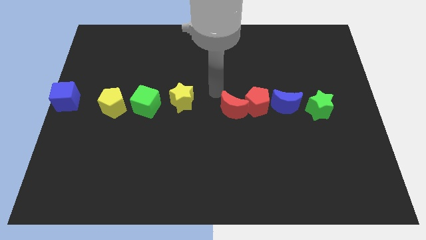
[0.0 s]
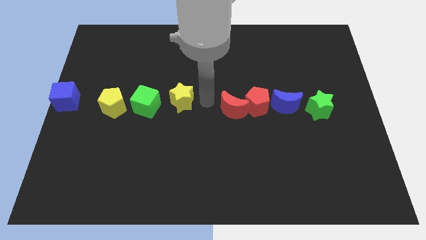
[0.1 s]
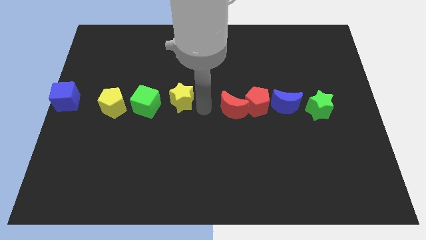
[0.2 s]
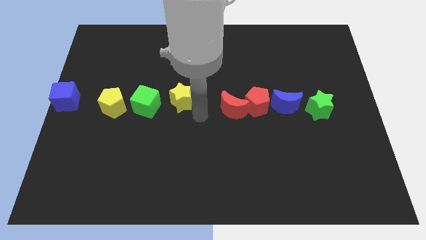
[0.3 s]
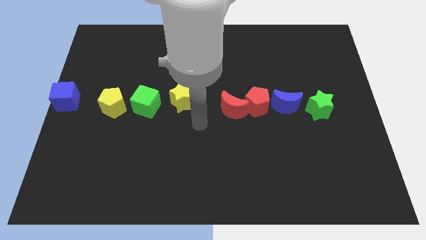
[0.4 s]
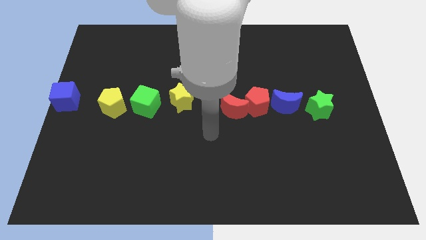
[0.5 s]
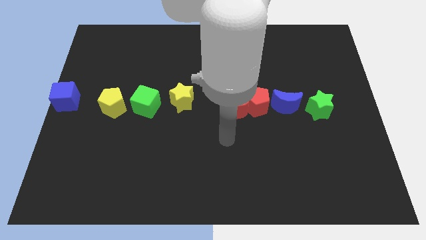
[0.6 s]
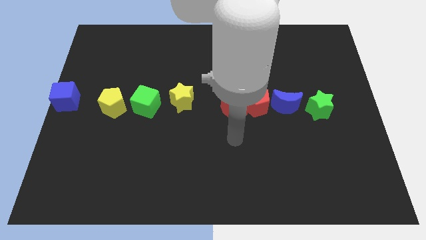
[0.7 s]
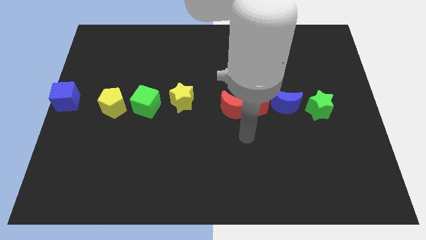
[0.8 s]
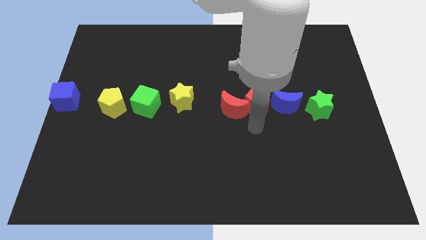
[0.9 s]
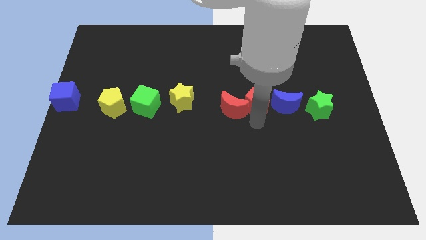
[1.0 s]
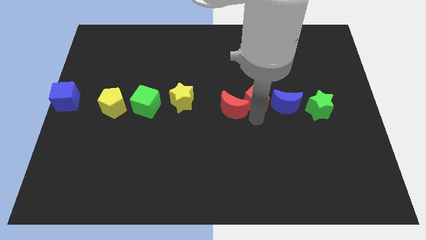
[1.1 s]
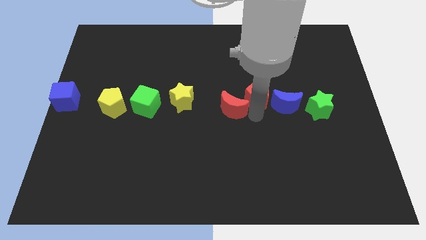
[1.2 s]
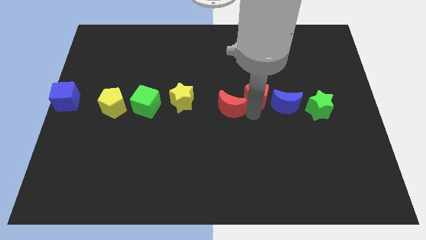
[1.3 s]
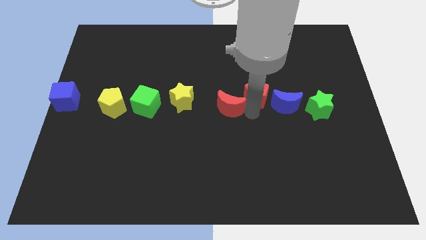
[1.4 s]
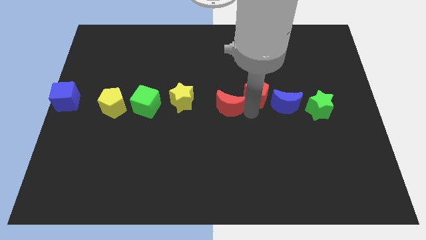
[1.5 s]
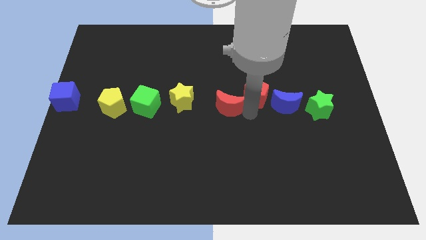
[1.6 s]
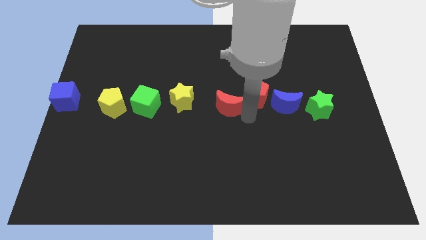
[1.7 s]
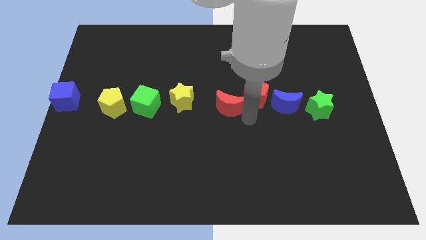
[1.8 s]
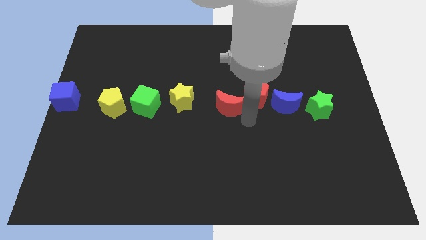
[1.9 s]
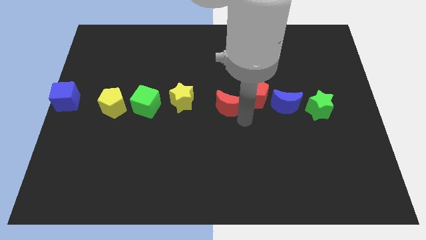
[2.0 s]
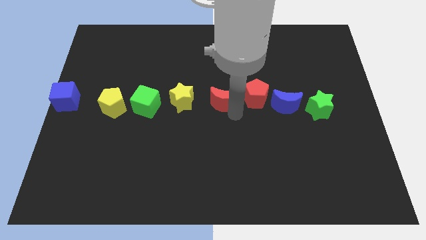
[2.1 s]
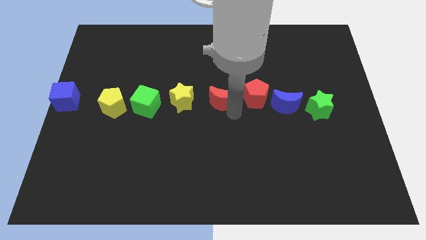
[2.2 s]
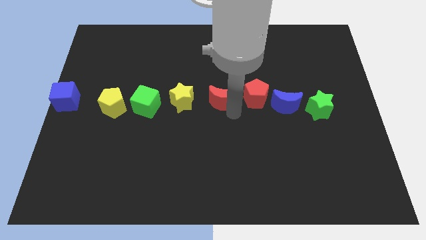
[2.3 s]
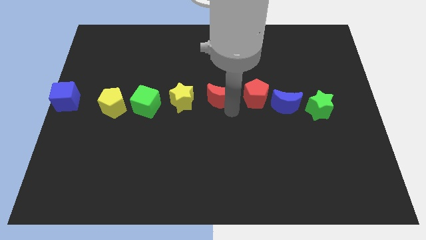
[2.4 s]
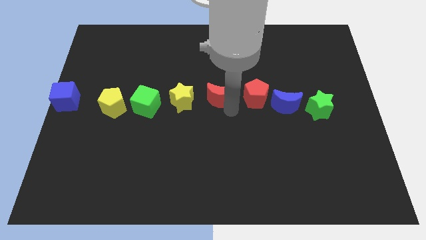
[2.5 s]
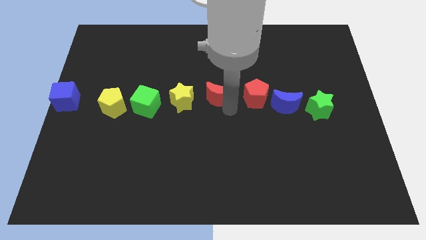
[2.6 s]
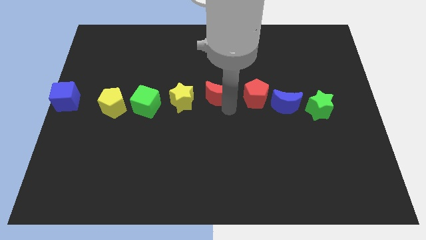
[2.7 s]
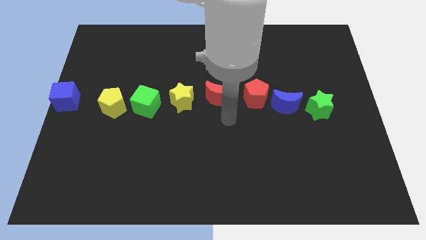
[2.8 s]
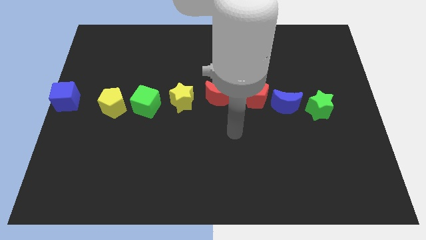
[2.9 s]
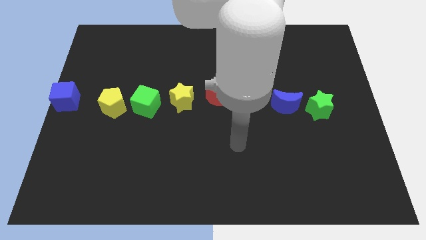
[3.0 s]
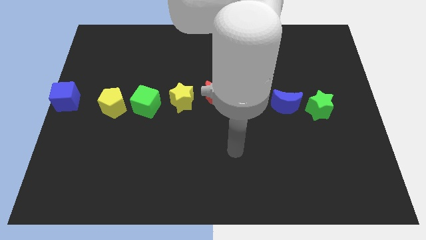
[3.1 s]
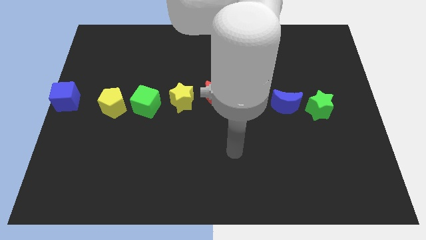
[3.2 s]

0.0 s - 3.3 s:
separate the group of red blocks

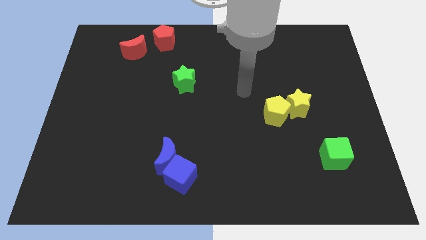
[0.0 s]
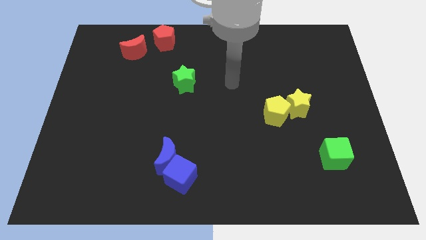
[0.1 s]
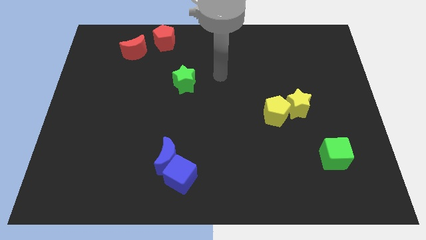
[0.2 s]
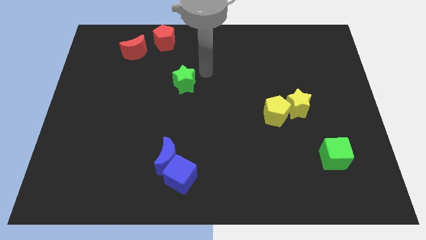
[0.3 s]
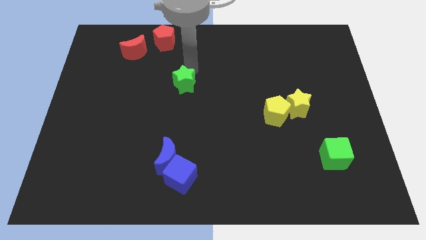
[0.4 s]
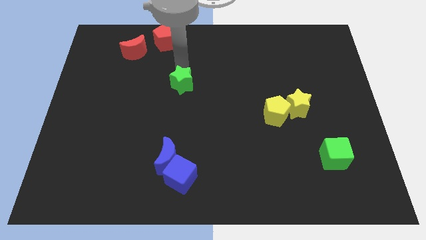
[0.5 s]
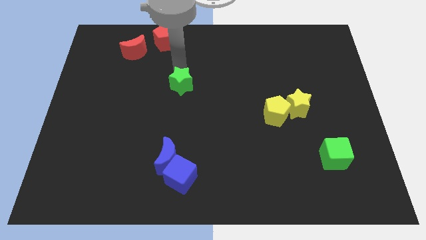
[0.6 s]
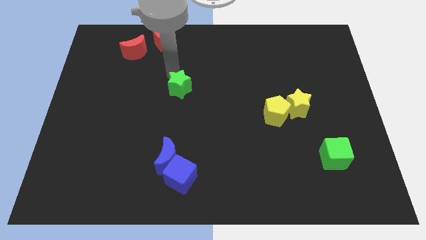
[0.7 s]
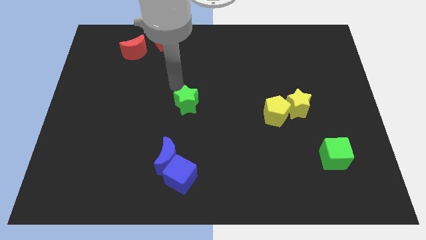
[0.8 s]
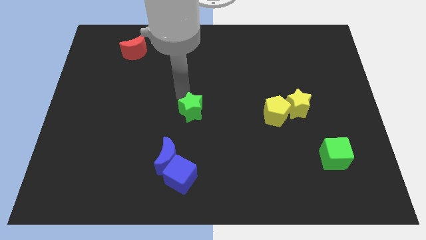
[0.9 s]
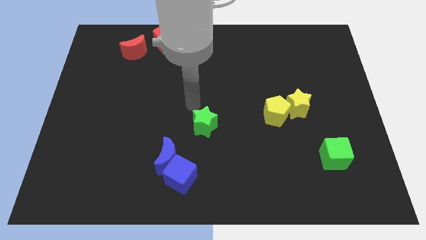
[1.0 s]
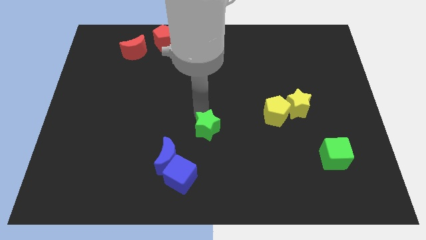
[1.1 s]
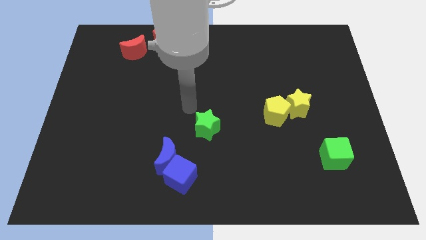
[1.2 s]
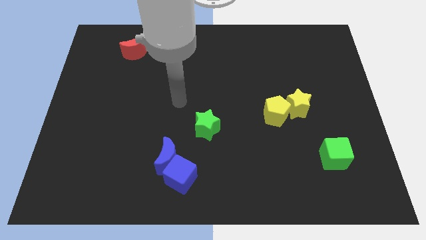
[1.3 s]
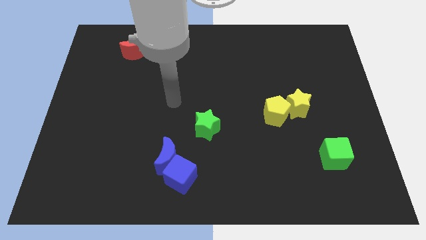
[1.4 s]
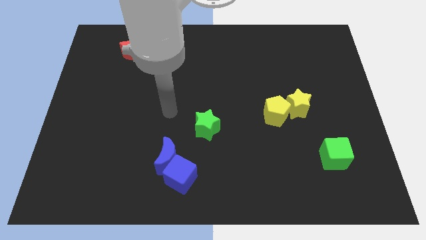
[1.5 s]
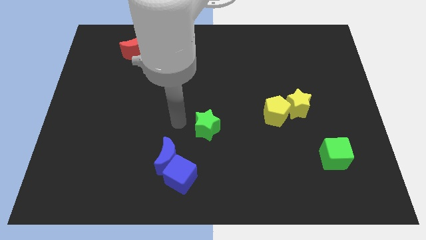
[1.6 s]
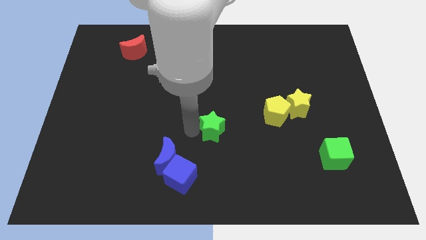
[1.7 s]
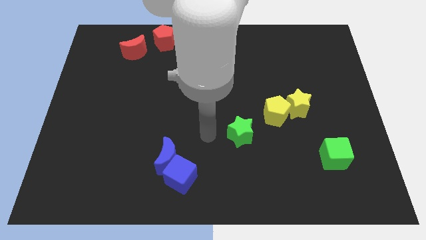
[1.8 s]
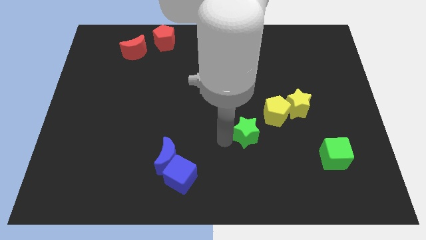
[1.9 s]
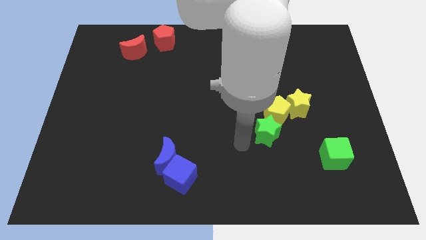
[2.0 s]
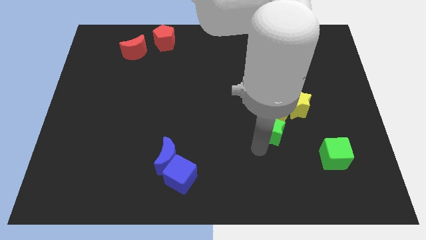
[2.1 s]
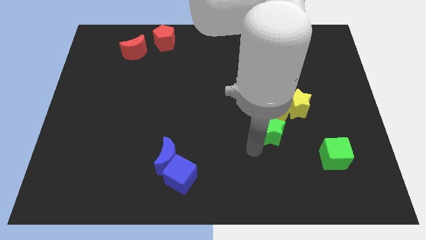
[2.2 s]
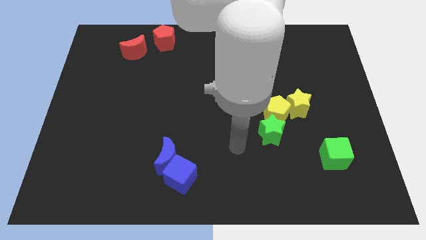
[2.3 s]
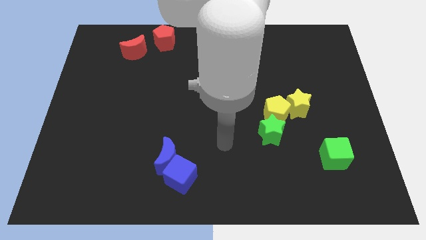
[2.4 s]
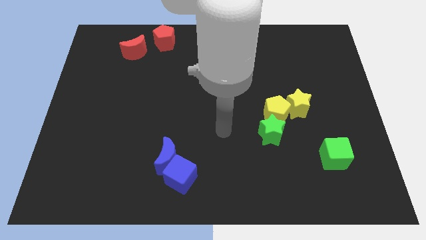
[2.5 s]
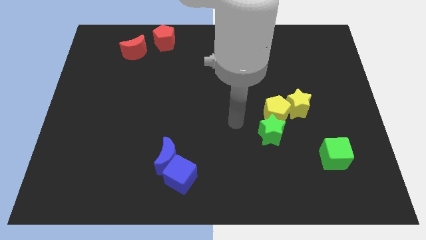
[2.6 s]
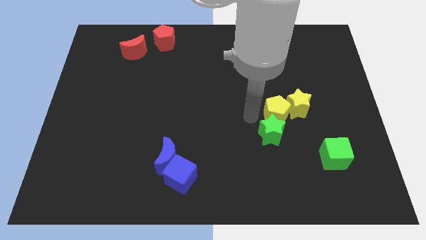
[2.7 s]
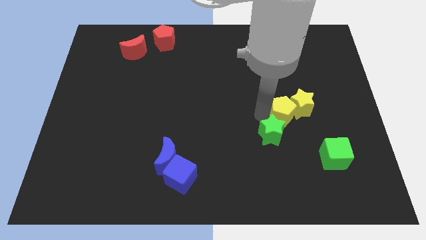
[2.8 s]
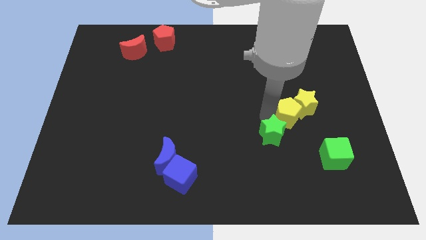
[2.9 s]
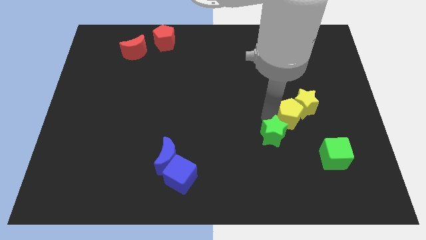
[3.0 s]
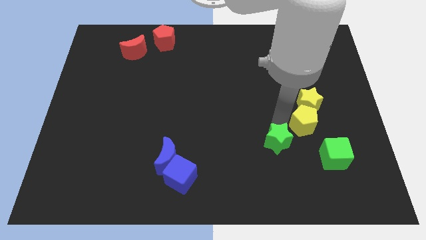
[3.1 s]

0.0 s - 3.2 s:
place the green star and yellow pentagon at the bottom left of the yellow star

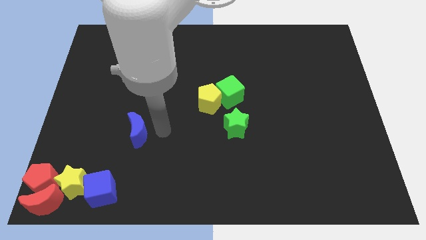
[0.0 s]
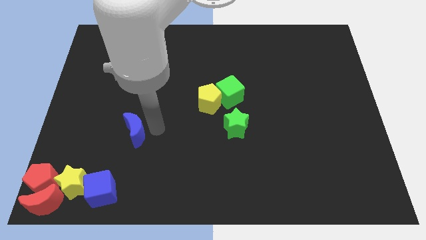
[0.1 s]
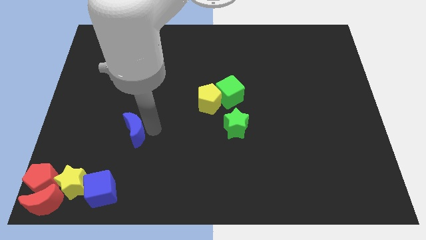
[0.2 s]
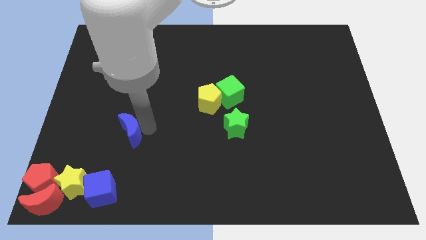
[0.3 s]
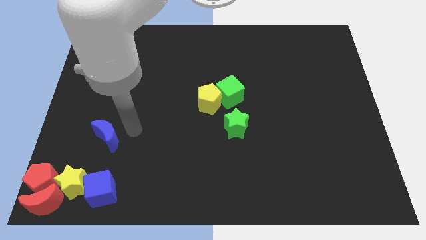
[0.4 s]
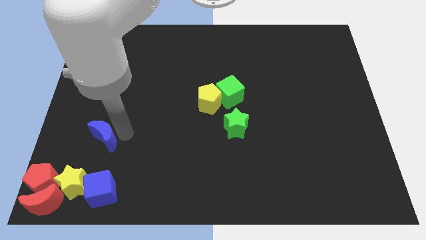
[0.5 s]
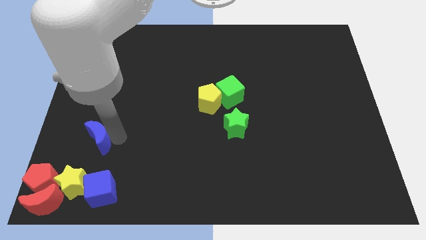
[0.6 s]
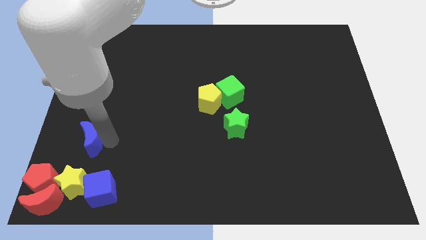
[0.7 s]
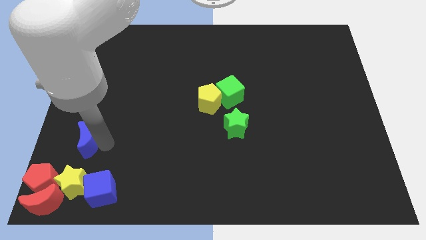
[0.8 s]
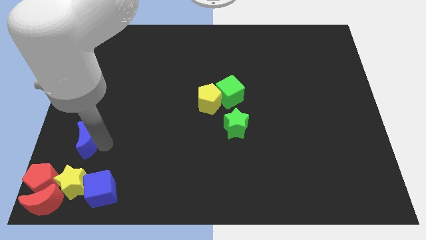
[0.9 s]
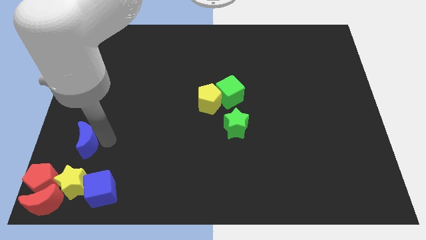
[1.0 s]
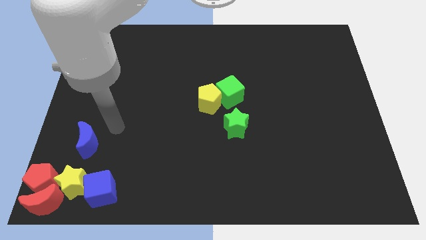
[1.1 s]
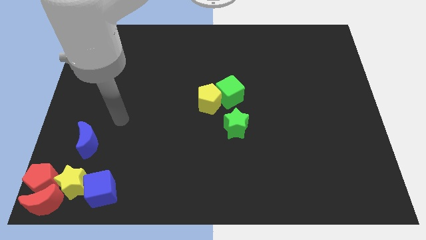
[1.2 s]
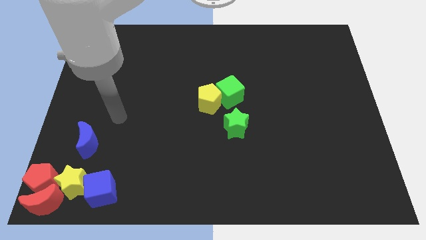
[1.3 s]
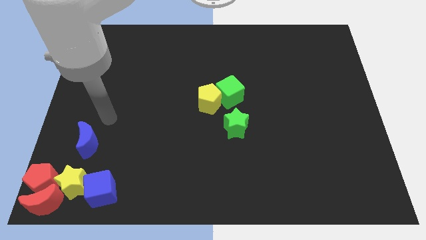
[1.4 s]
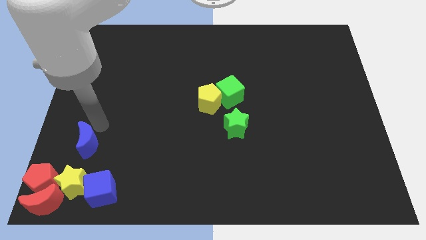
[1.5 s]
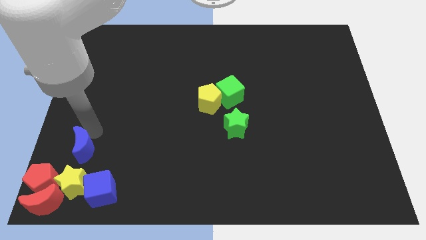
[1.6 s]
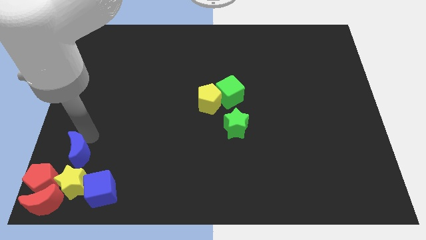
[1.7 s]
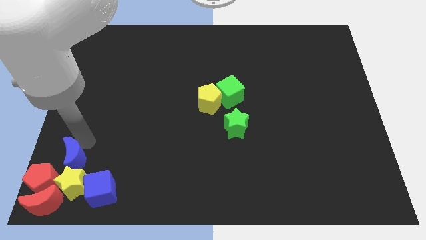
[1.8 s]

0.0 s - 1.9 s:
place the blue moon above the yellow star

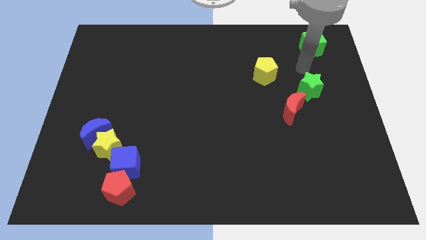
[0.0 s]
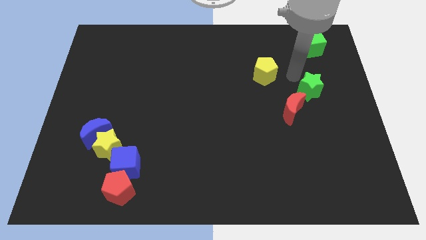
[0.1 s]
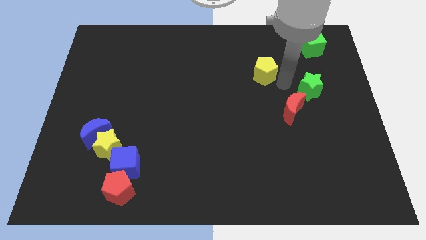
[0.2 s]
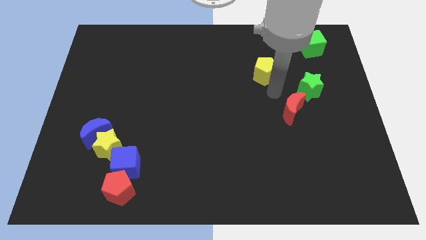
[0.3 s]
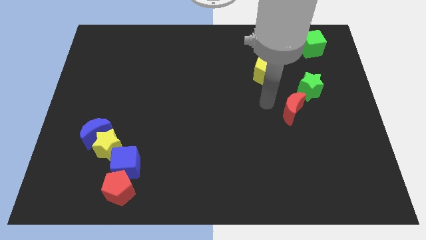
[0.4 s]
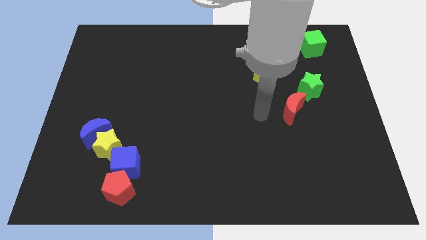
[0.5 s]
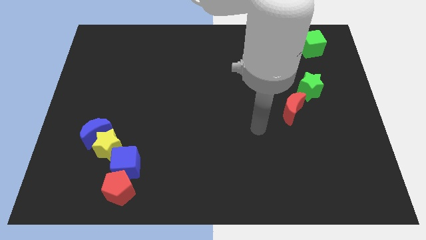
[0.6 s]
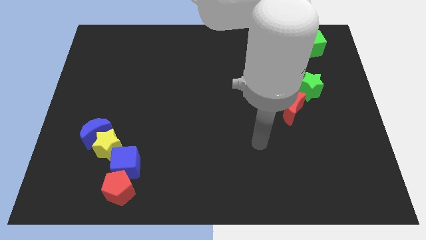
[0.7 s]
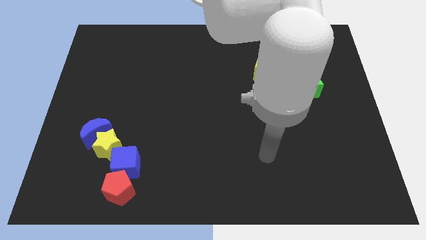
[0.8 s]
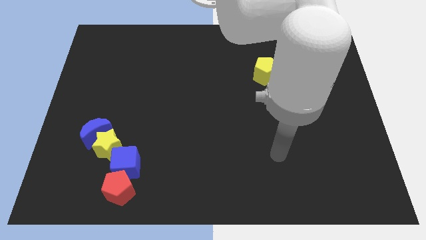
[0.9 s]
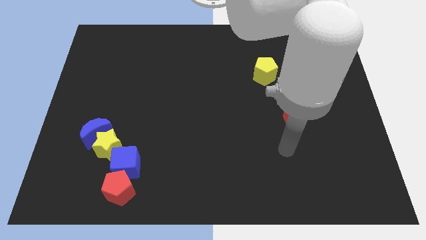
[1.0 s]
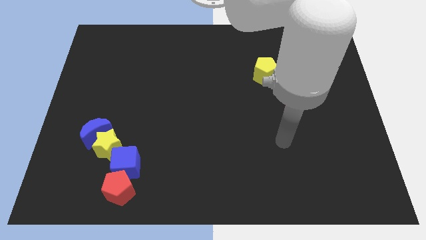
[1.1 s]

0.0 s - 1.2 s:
point your arm at the bottom of the red crescent
